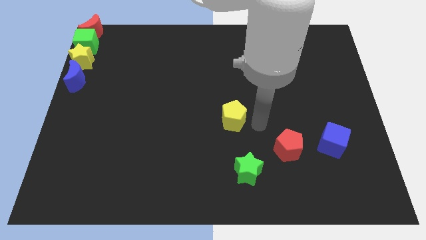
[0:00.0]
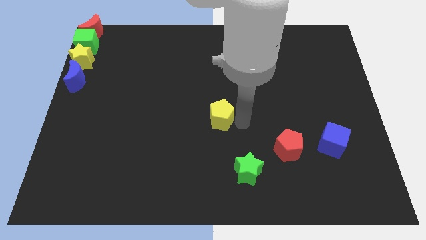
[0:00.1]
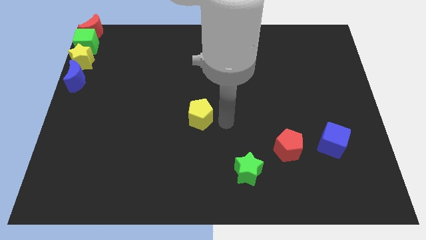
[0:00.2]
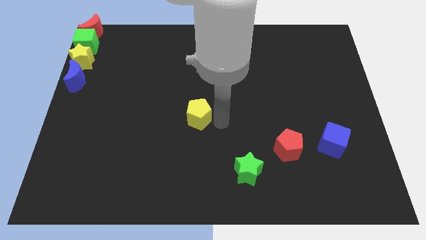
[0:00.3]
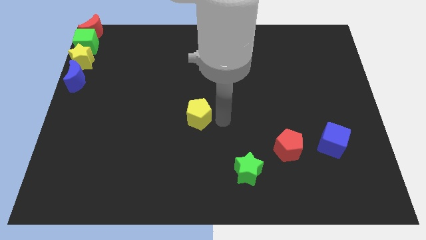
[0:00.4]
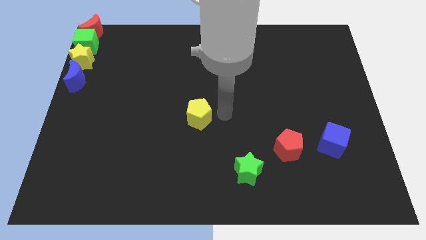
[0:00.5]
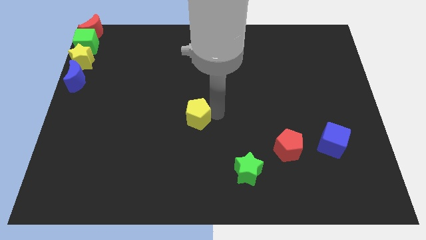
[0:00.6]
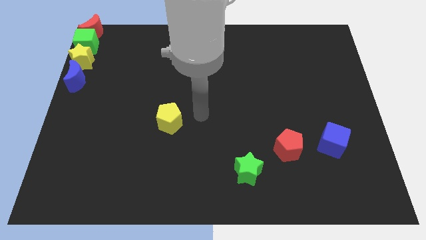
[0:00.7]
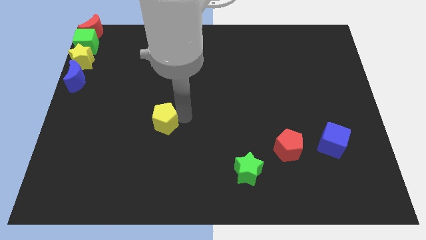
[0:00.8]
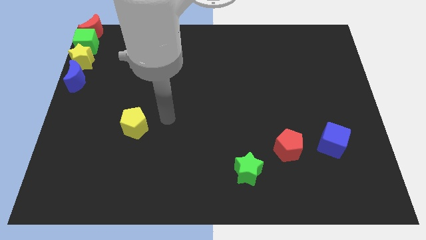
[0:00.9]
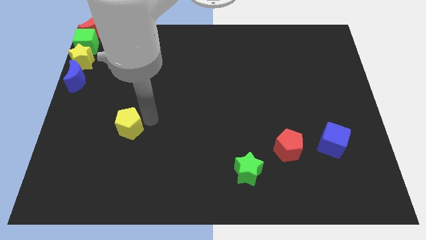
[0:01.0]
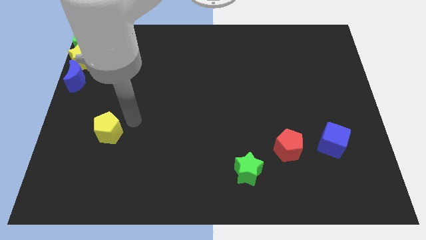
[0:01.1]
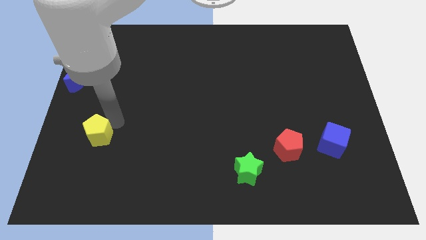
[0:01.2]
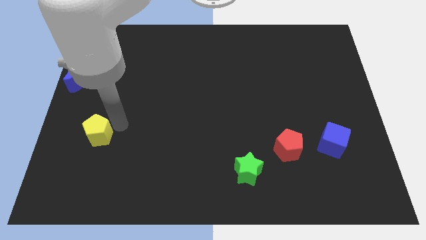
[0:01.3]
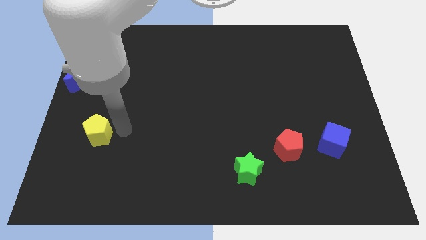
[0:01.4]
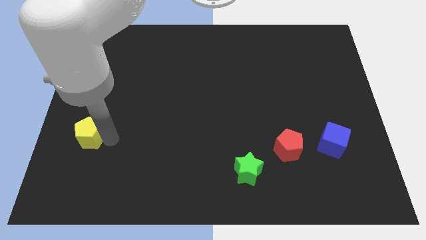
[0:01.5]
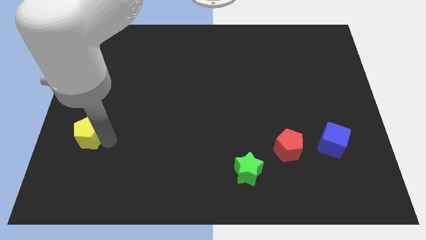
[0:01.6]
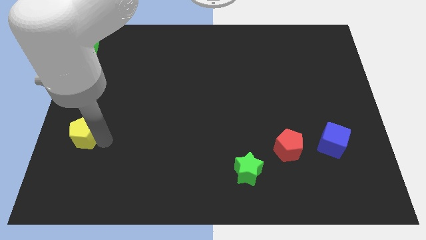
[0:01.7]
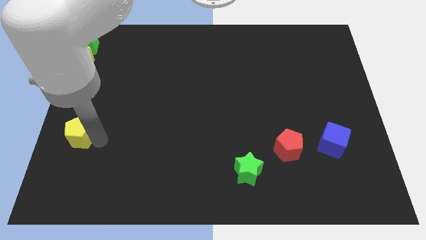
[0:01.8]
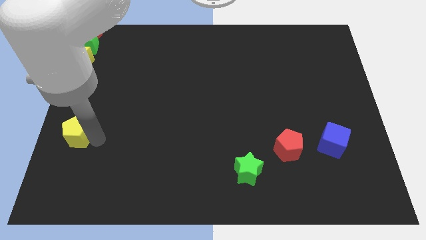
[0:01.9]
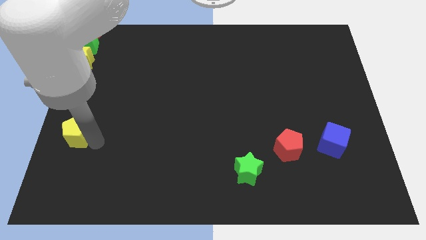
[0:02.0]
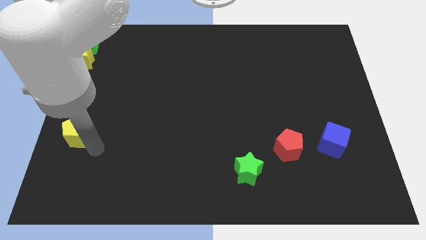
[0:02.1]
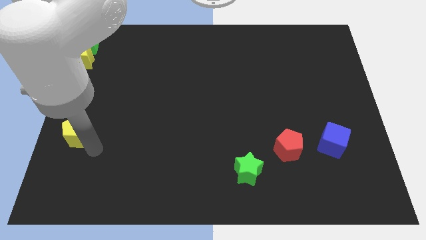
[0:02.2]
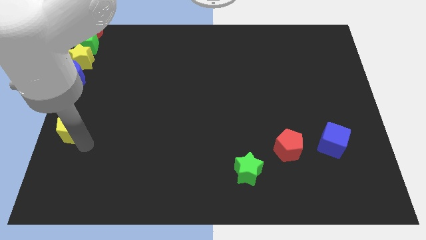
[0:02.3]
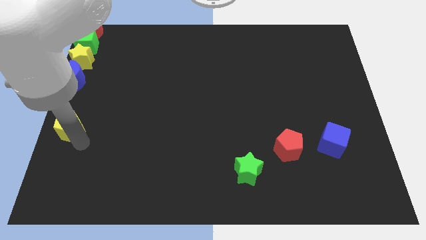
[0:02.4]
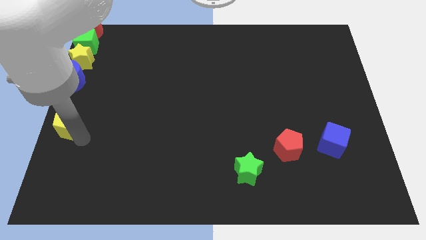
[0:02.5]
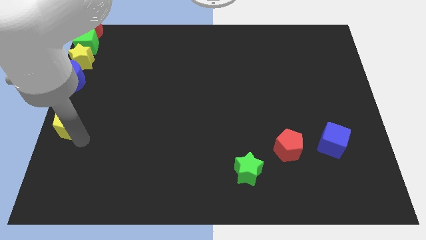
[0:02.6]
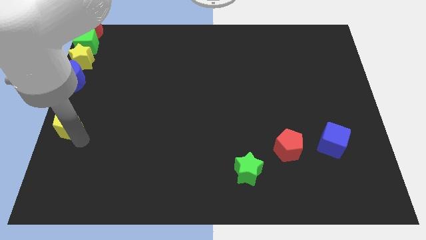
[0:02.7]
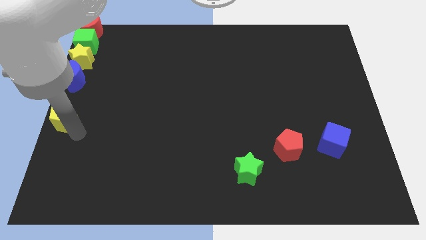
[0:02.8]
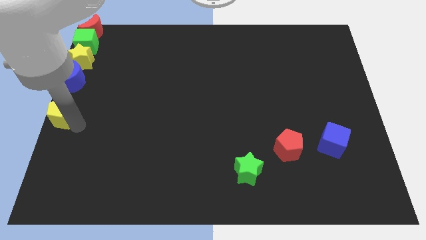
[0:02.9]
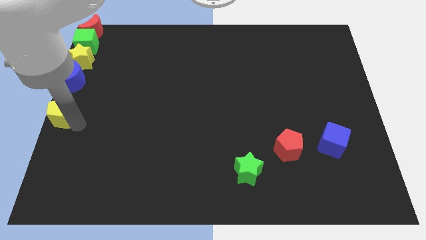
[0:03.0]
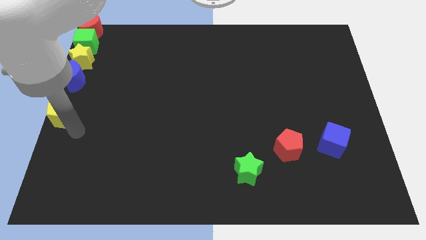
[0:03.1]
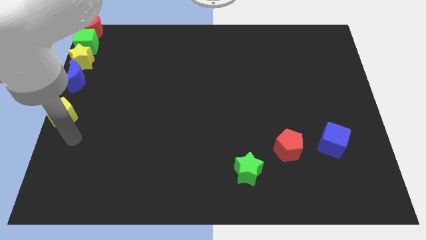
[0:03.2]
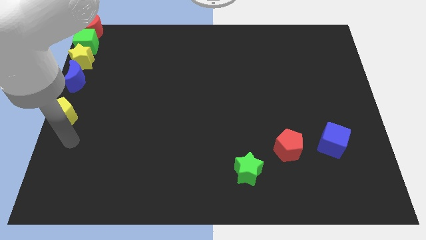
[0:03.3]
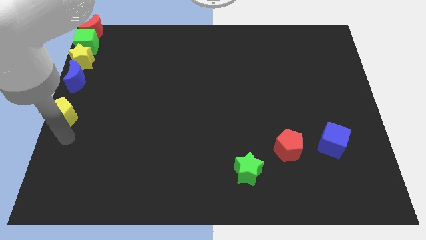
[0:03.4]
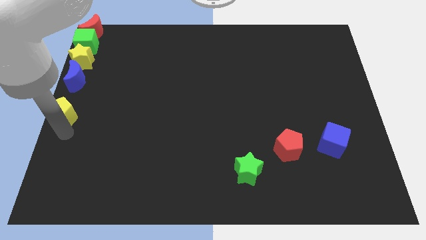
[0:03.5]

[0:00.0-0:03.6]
place the yellow pentagon down to the blue moon

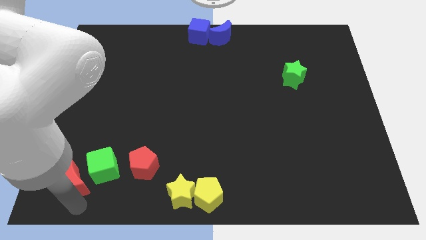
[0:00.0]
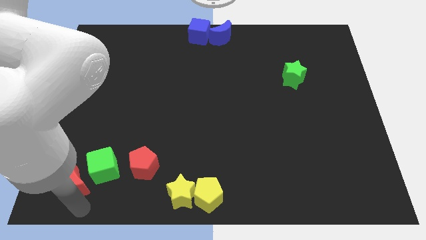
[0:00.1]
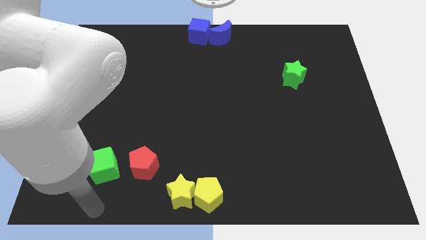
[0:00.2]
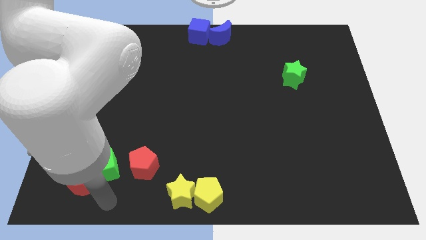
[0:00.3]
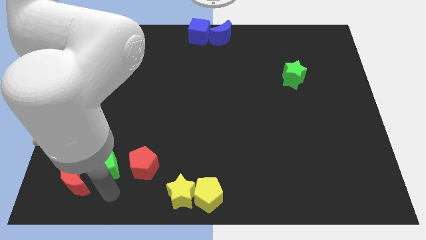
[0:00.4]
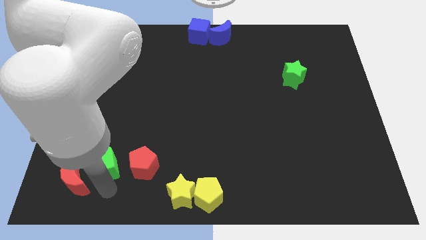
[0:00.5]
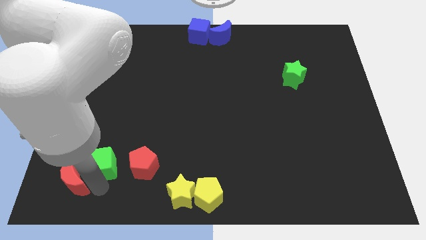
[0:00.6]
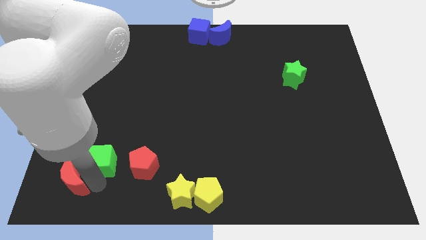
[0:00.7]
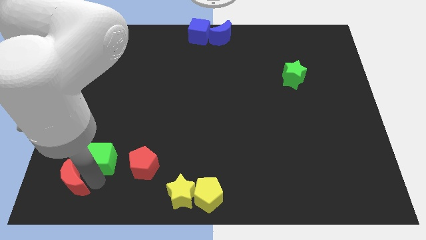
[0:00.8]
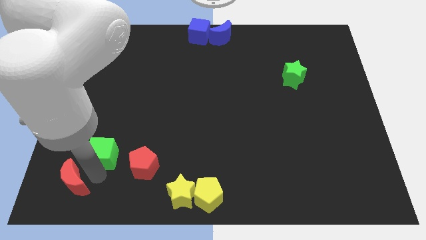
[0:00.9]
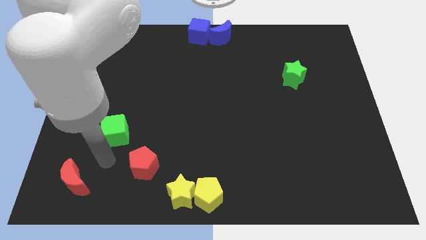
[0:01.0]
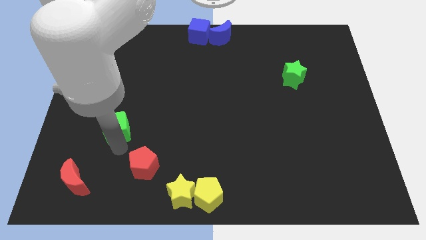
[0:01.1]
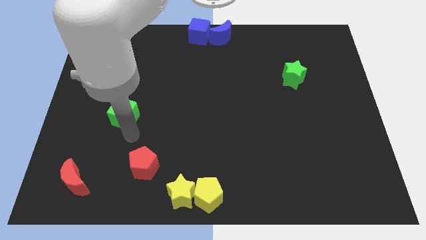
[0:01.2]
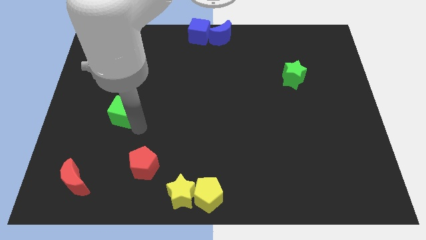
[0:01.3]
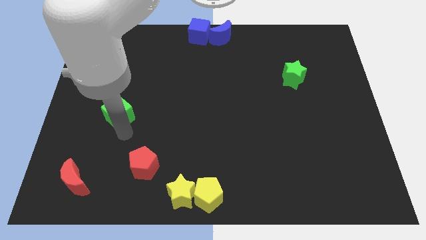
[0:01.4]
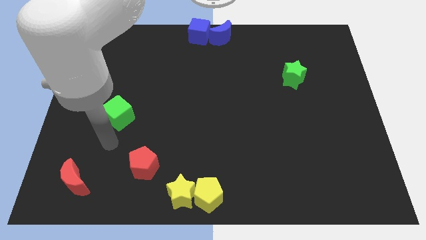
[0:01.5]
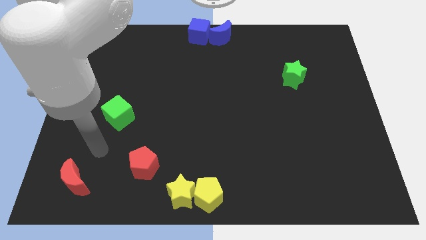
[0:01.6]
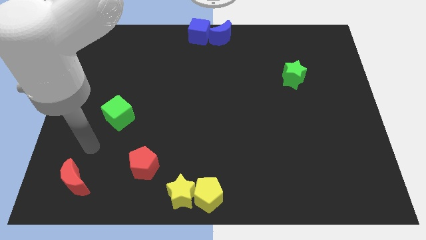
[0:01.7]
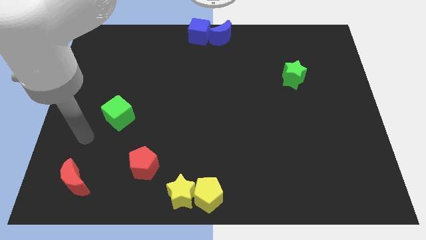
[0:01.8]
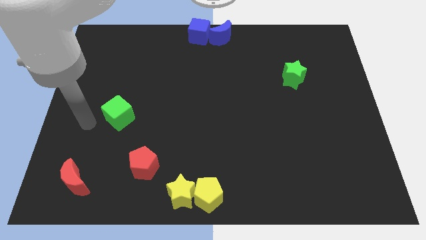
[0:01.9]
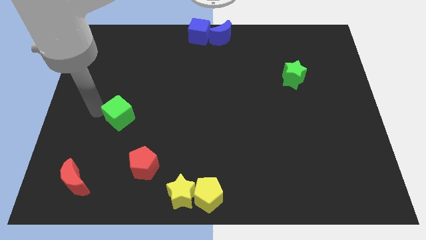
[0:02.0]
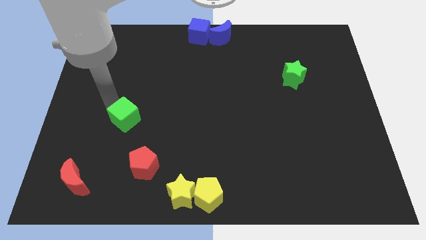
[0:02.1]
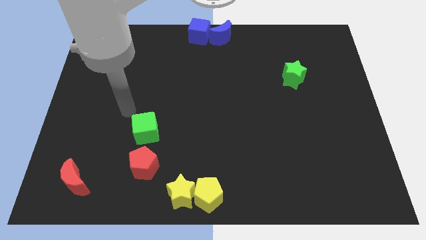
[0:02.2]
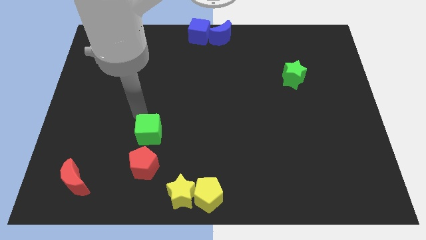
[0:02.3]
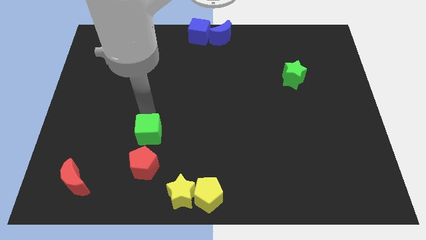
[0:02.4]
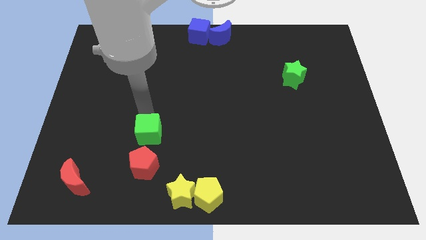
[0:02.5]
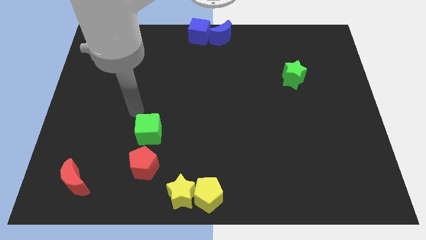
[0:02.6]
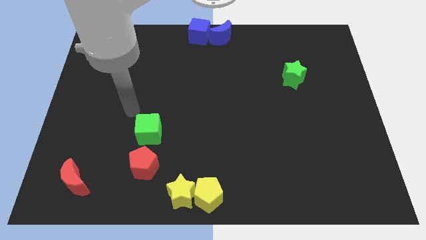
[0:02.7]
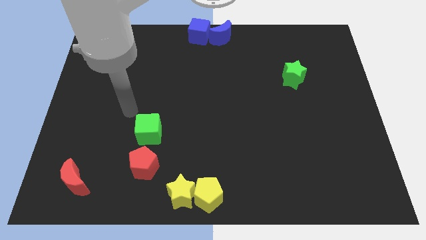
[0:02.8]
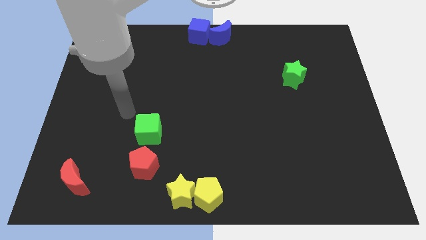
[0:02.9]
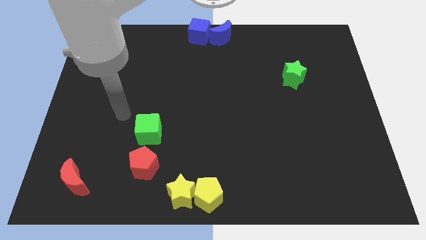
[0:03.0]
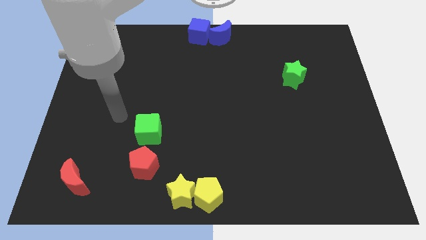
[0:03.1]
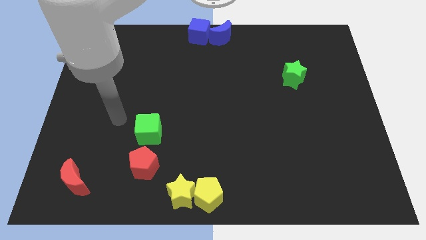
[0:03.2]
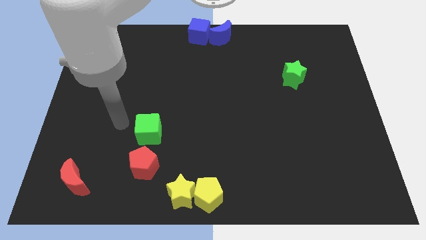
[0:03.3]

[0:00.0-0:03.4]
move the green cube above the red pentagon

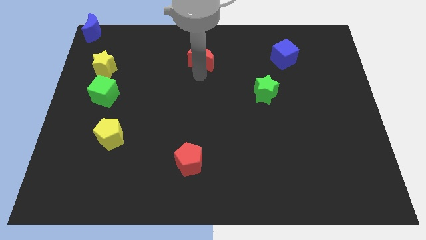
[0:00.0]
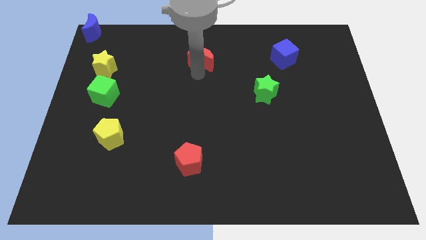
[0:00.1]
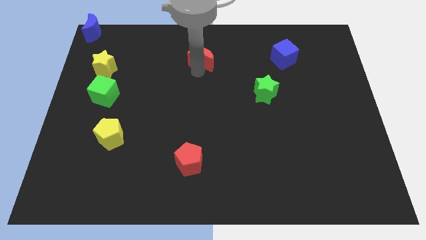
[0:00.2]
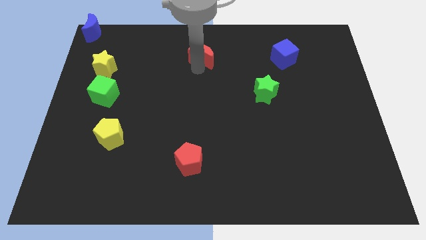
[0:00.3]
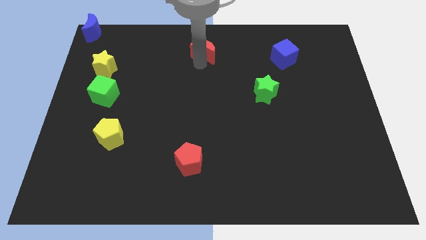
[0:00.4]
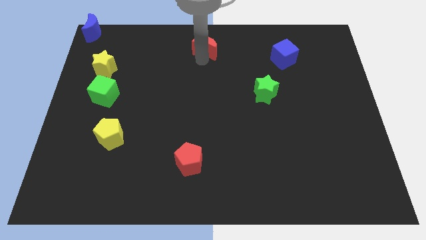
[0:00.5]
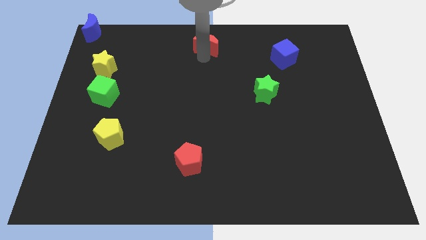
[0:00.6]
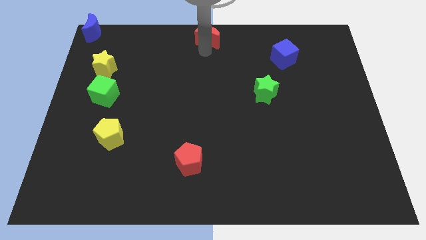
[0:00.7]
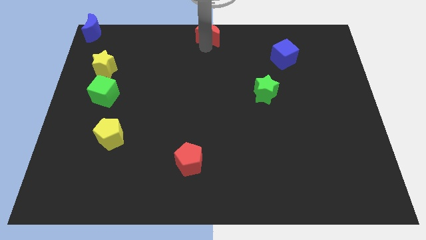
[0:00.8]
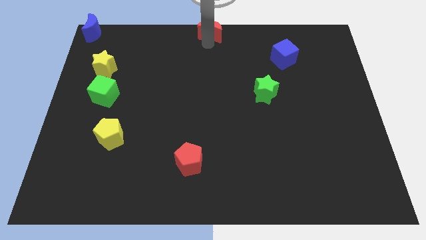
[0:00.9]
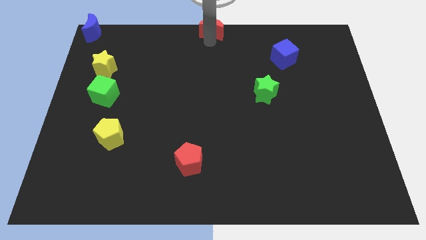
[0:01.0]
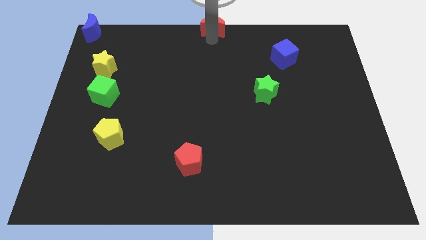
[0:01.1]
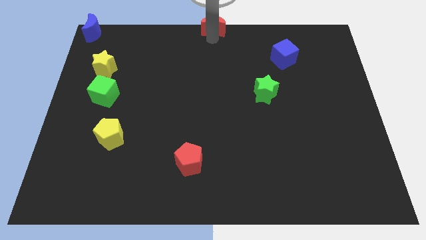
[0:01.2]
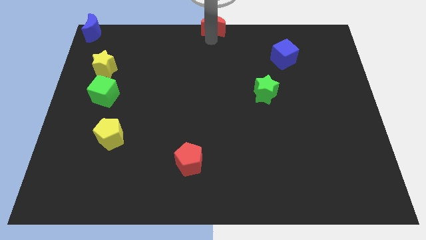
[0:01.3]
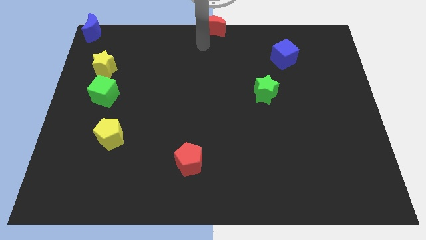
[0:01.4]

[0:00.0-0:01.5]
push the red crescent to the top center of the board

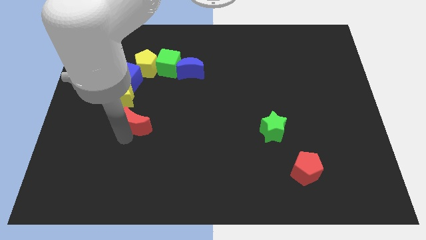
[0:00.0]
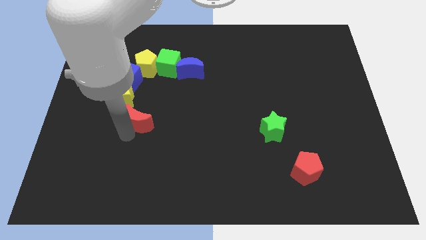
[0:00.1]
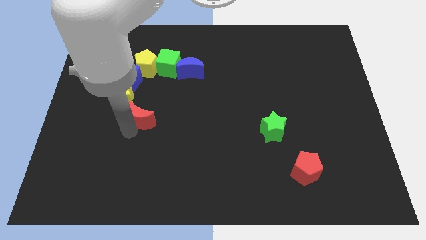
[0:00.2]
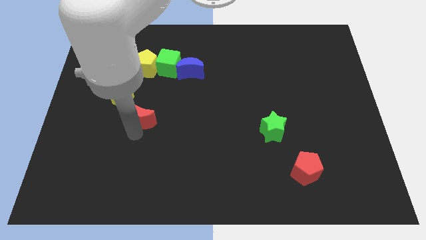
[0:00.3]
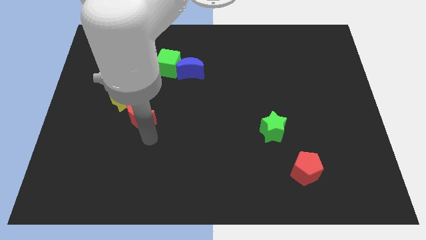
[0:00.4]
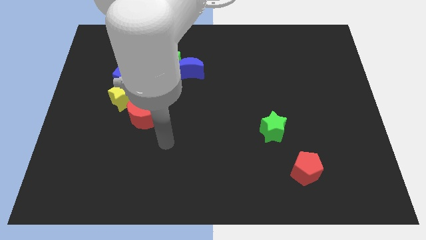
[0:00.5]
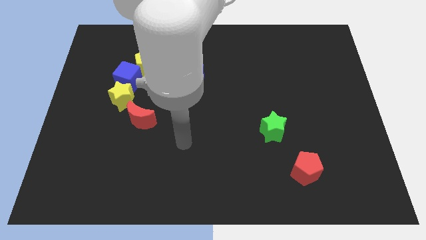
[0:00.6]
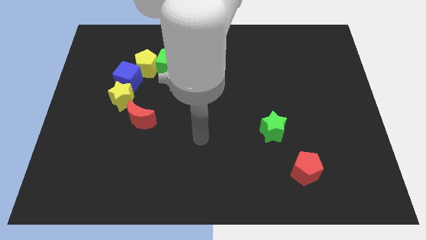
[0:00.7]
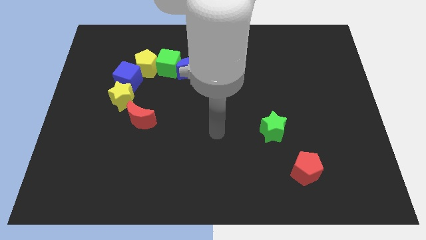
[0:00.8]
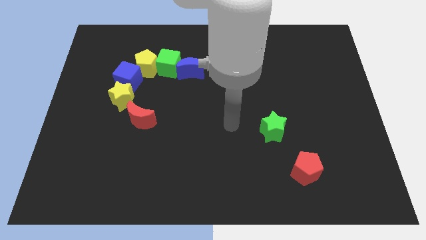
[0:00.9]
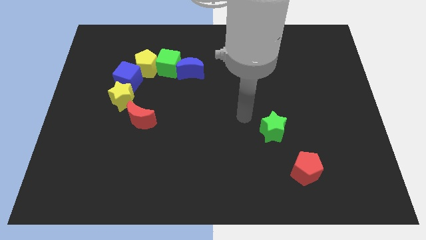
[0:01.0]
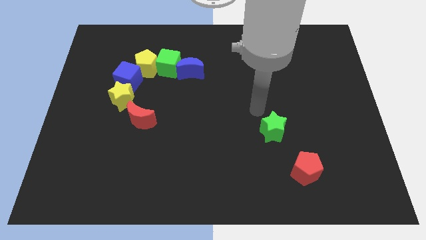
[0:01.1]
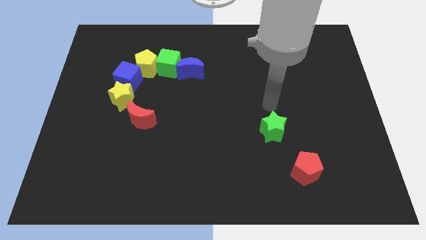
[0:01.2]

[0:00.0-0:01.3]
move the red moon into the yellow star
